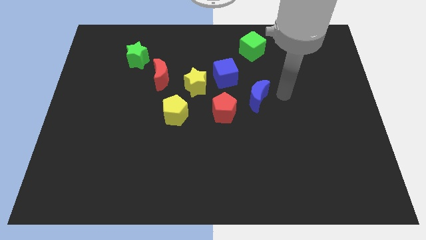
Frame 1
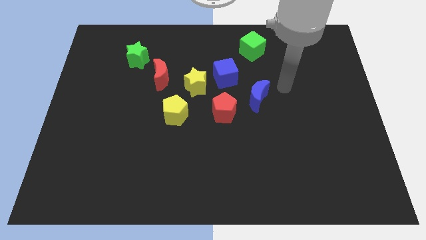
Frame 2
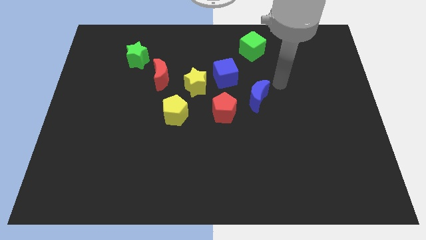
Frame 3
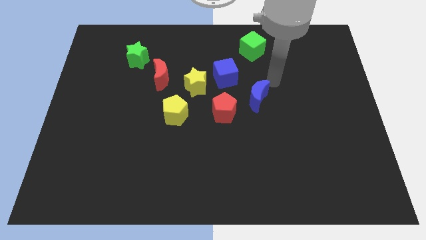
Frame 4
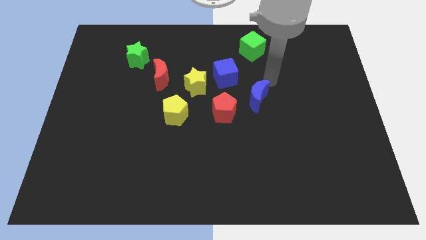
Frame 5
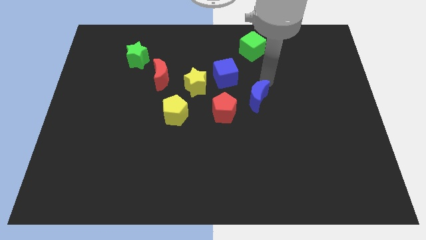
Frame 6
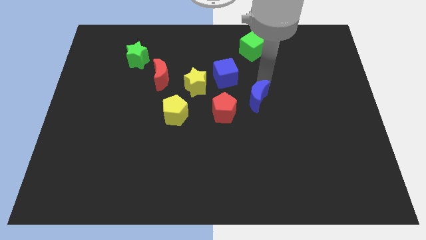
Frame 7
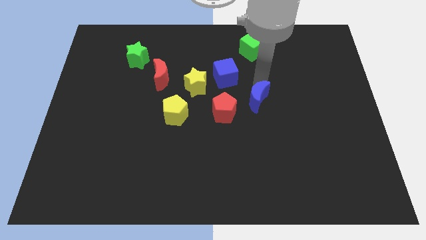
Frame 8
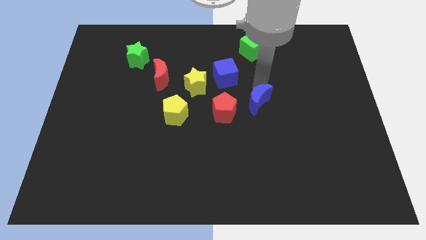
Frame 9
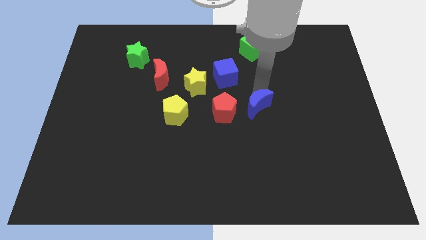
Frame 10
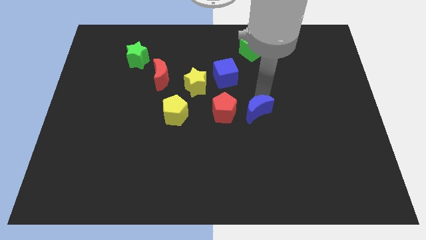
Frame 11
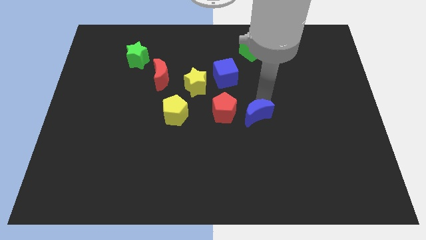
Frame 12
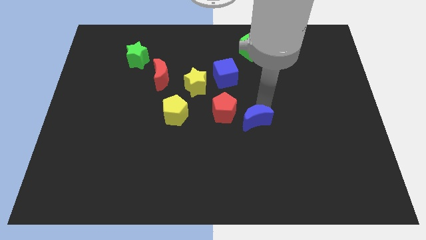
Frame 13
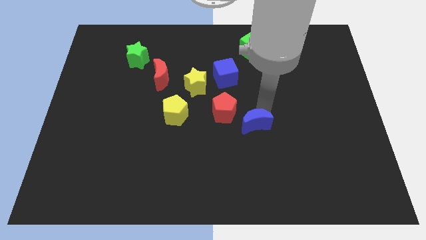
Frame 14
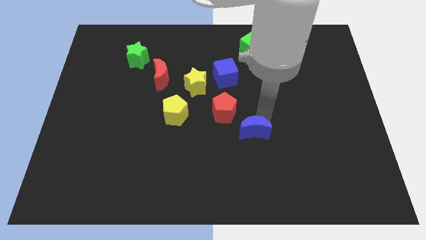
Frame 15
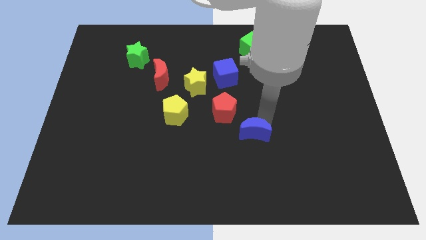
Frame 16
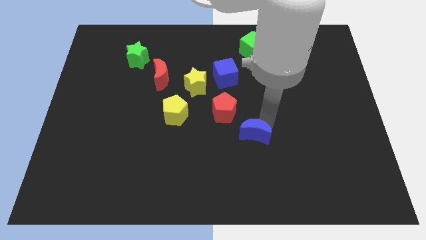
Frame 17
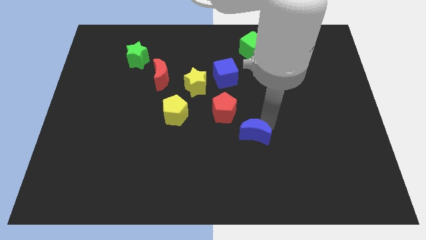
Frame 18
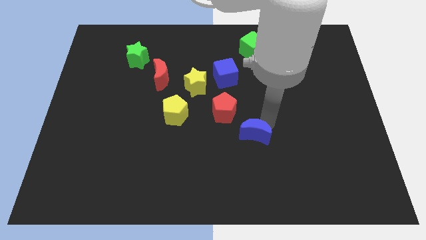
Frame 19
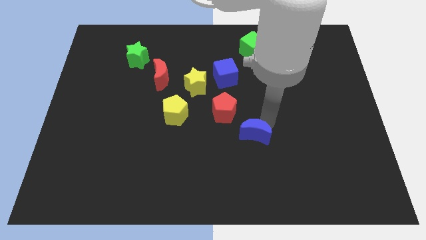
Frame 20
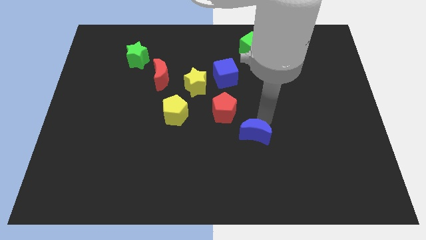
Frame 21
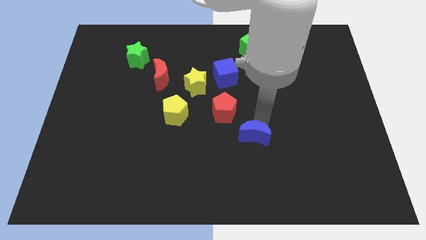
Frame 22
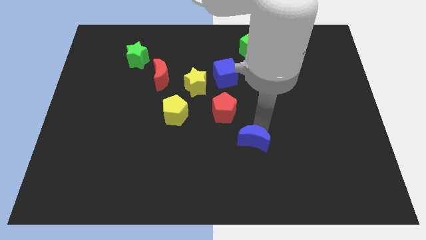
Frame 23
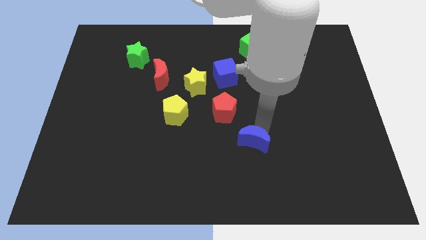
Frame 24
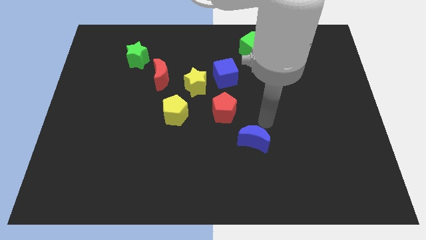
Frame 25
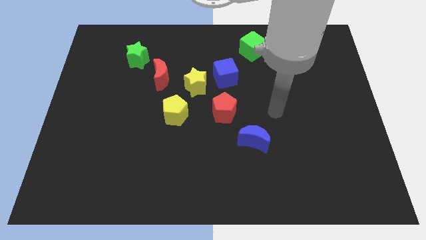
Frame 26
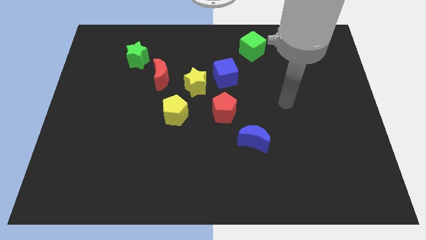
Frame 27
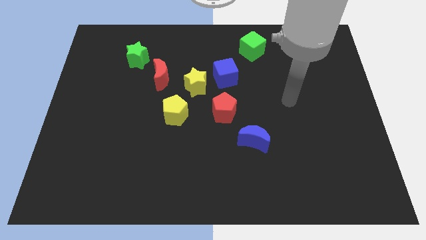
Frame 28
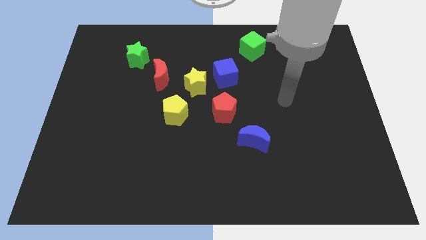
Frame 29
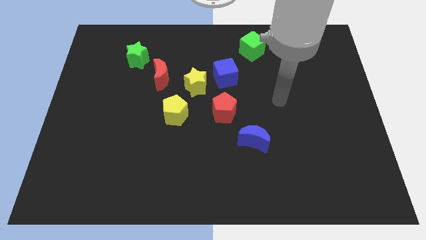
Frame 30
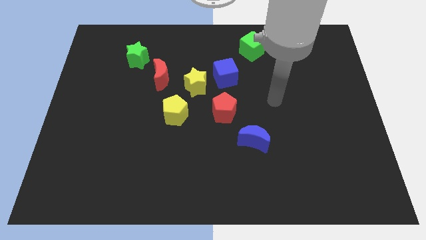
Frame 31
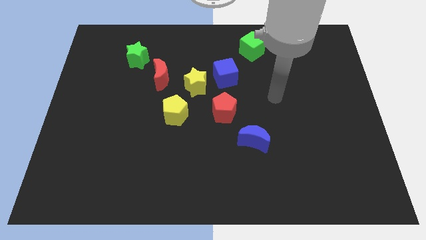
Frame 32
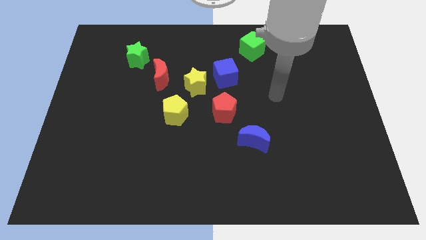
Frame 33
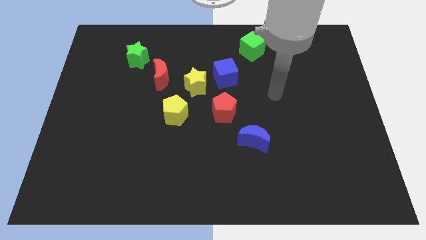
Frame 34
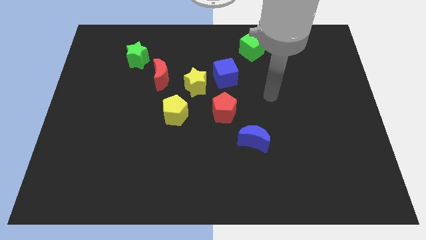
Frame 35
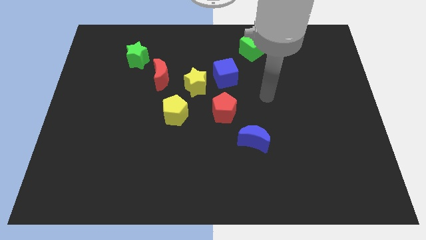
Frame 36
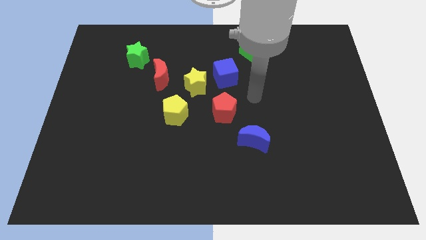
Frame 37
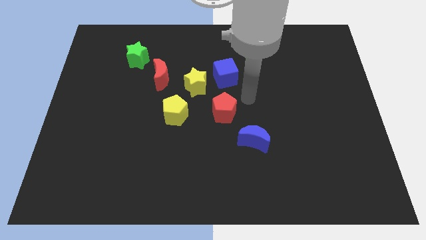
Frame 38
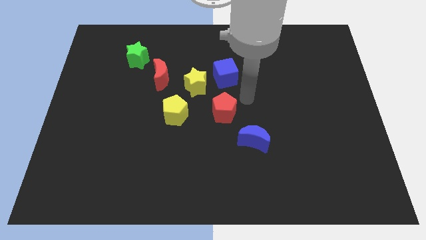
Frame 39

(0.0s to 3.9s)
push the blue crescent diagonally right below the red pentagon

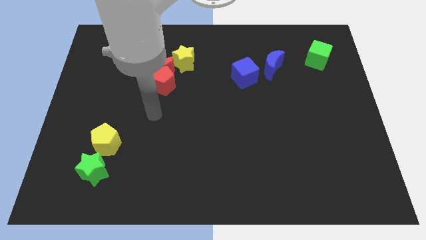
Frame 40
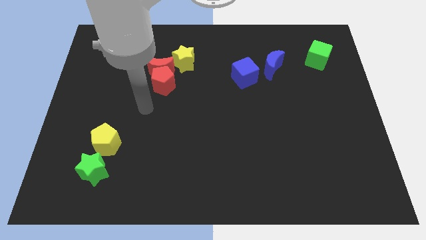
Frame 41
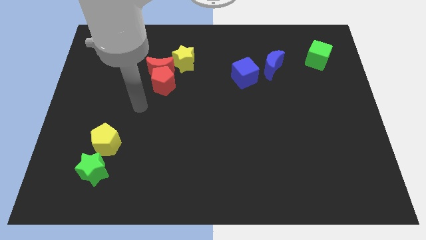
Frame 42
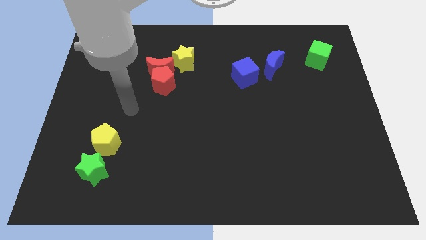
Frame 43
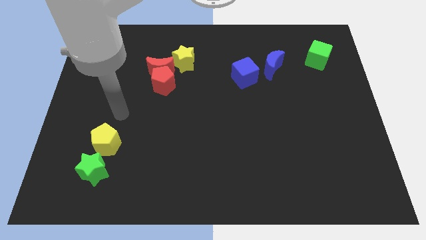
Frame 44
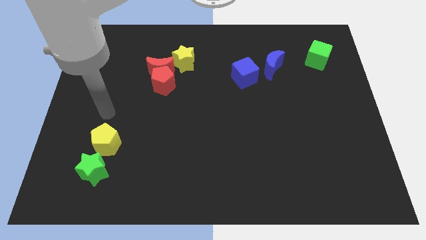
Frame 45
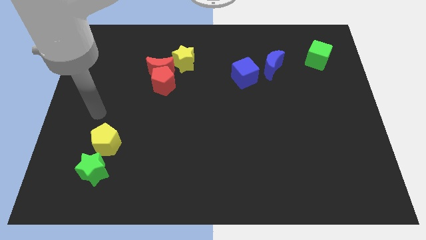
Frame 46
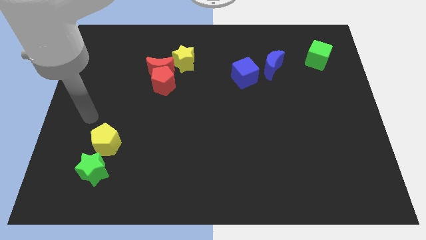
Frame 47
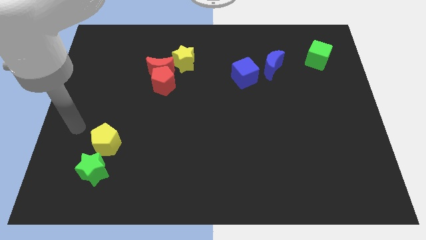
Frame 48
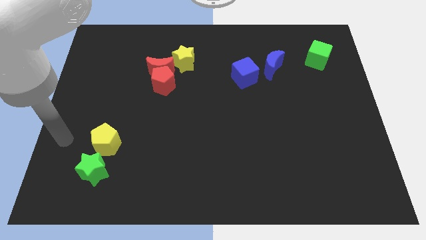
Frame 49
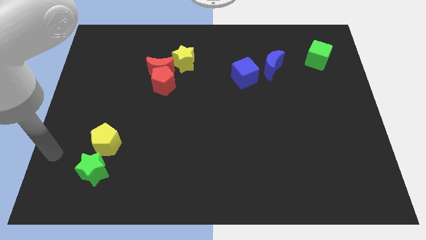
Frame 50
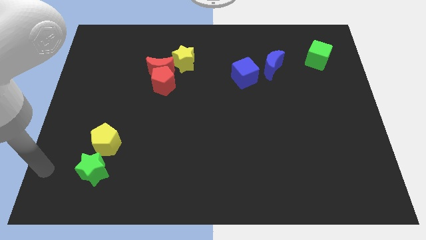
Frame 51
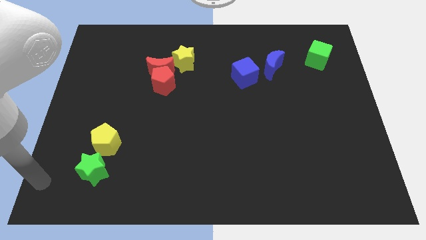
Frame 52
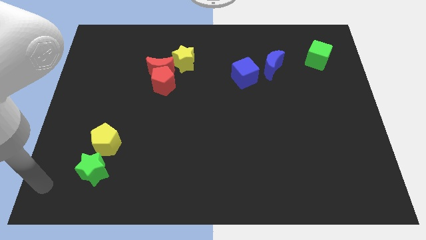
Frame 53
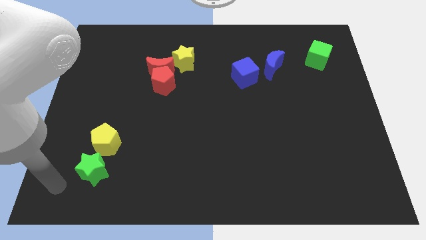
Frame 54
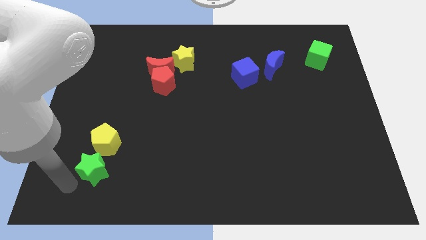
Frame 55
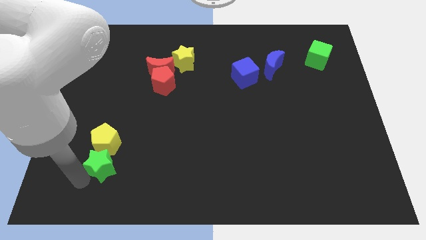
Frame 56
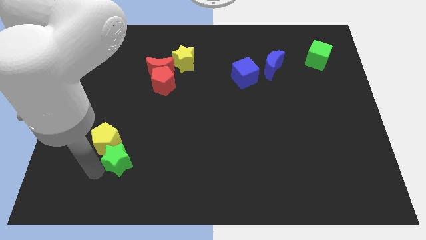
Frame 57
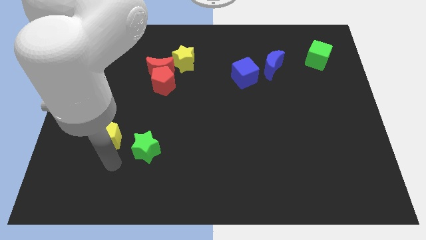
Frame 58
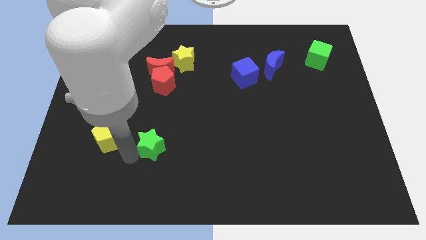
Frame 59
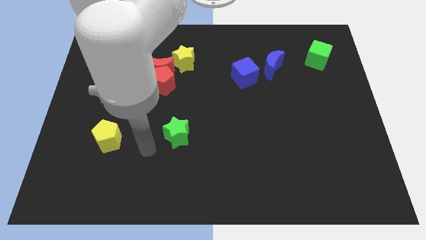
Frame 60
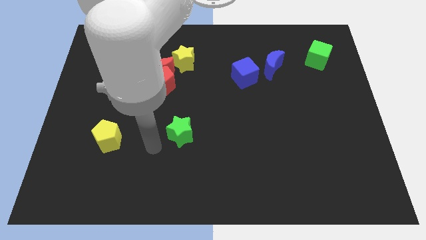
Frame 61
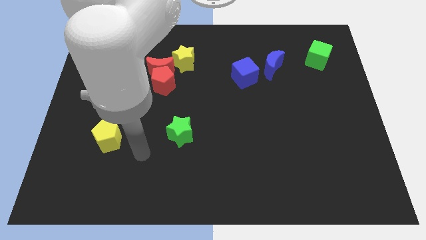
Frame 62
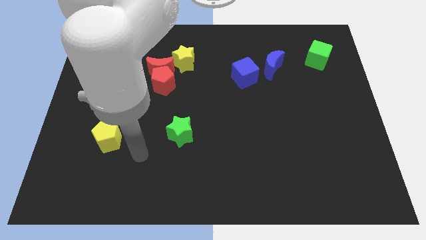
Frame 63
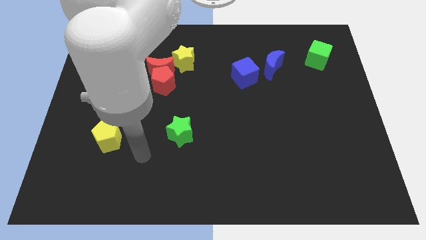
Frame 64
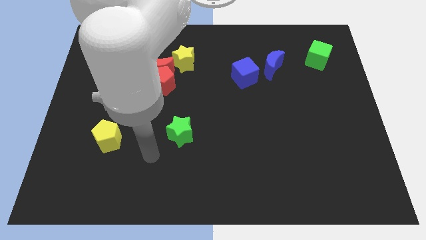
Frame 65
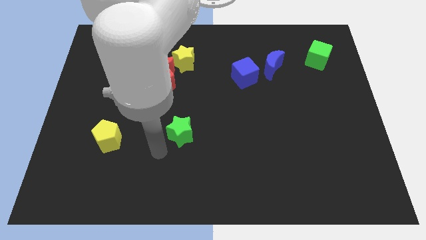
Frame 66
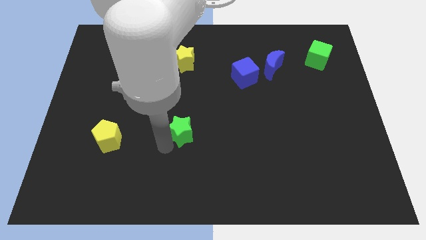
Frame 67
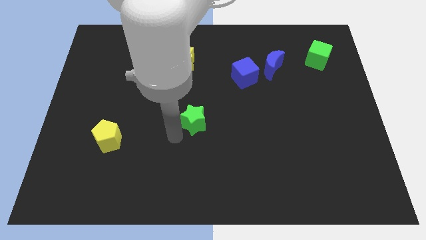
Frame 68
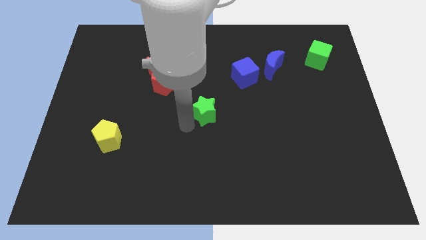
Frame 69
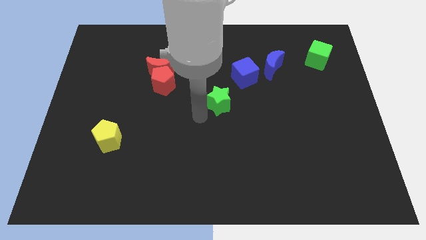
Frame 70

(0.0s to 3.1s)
move the green star to the center of the board

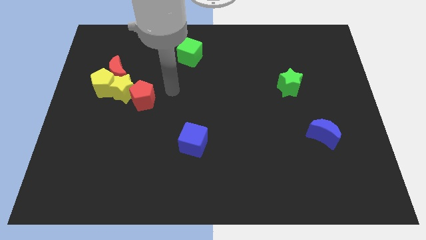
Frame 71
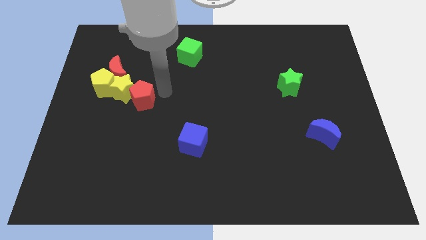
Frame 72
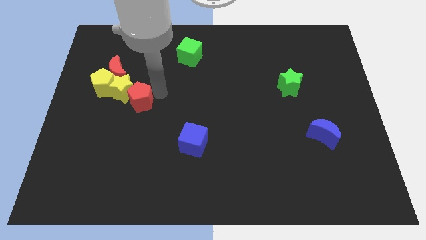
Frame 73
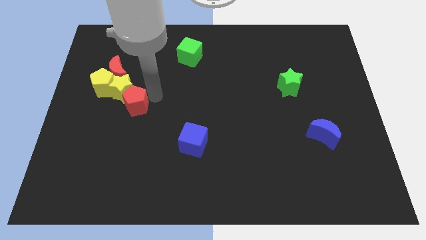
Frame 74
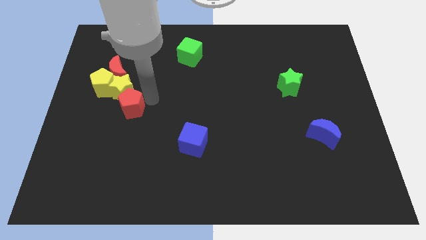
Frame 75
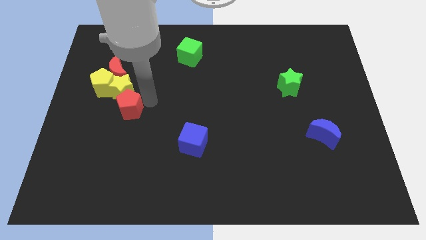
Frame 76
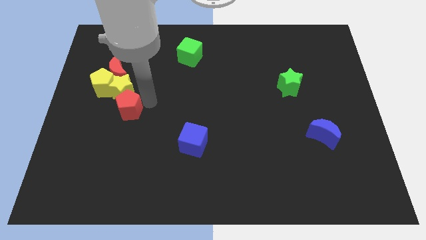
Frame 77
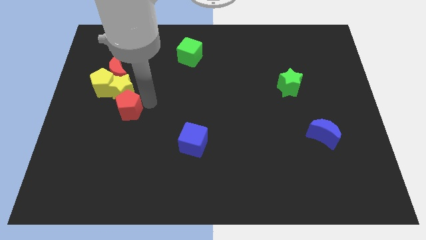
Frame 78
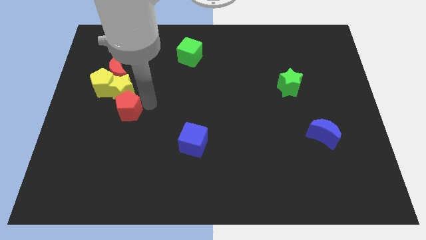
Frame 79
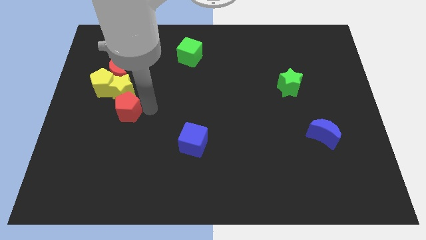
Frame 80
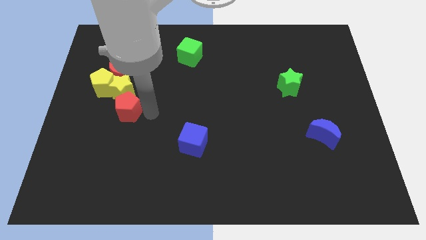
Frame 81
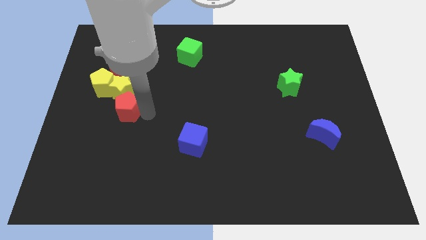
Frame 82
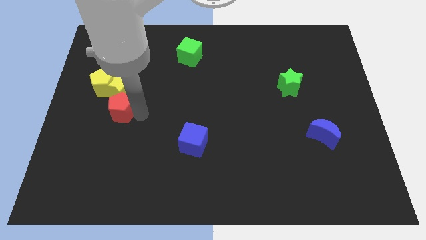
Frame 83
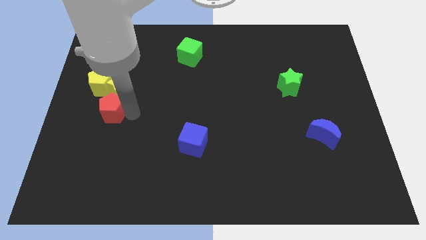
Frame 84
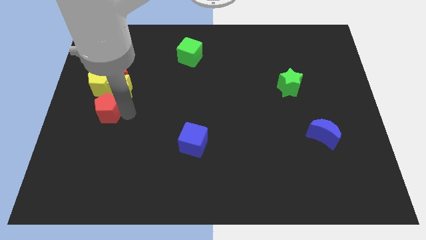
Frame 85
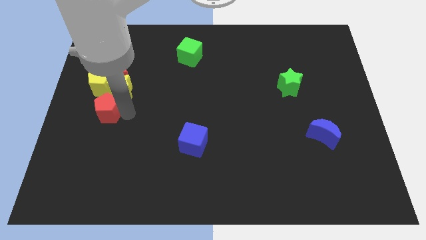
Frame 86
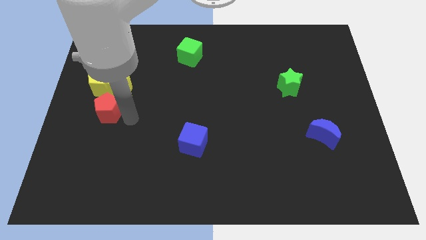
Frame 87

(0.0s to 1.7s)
put the red pentagon underneath the yellow blocks

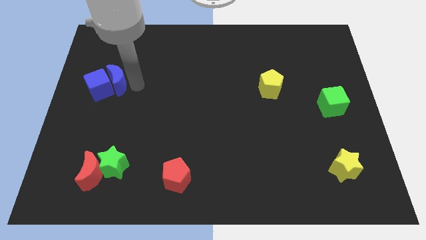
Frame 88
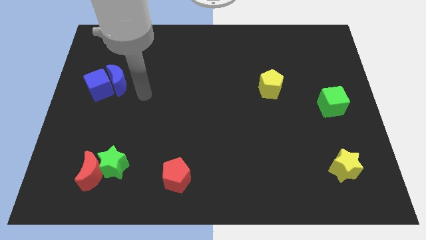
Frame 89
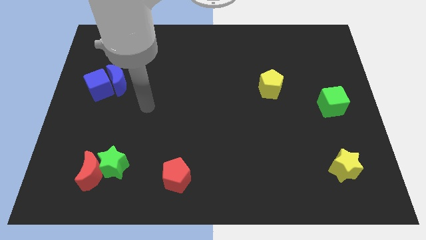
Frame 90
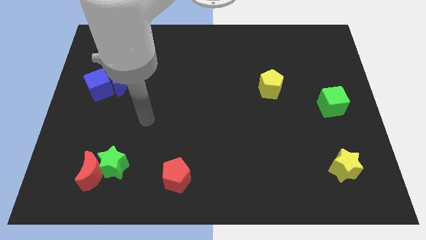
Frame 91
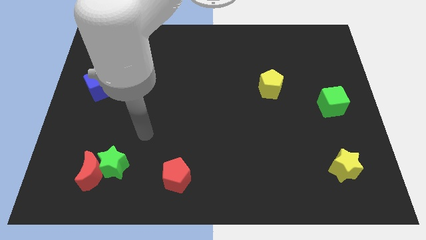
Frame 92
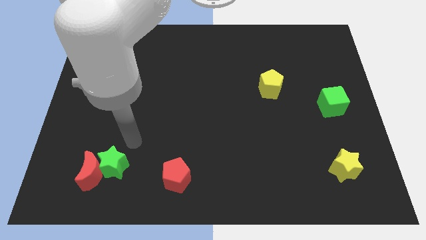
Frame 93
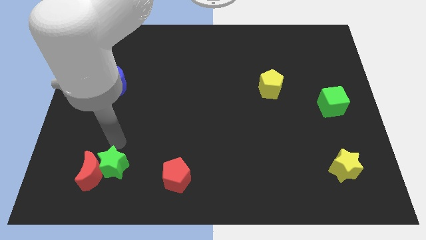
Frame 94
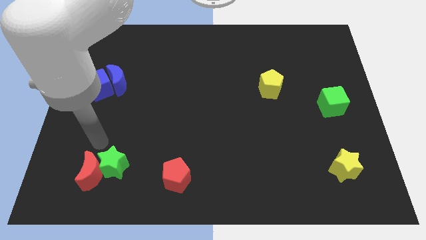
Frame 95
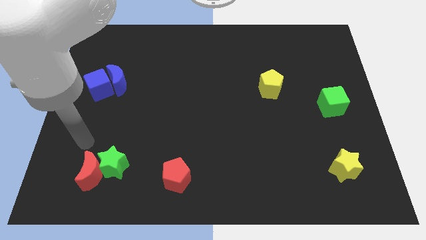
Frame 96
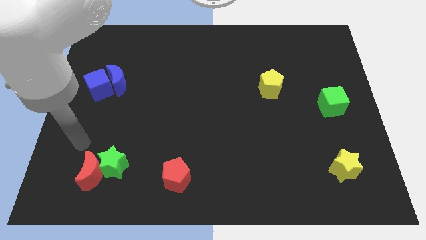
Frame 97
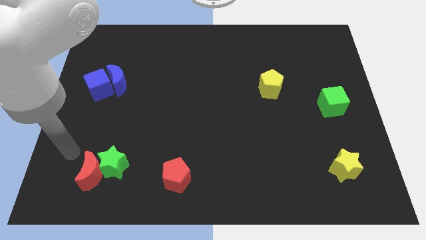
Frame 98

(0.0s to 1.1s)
move your arm towards the top right side of the red moon
